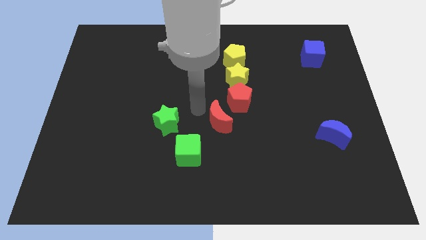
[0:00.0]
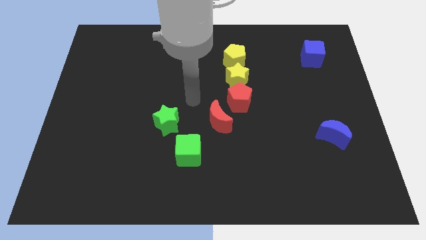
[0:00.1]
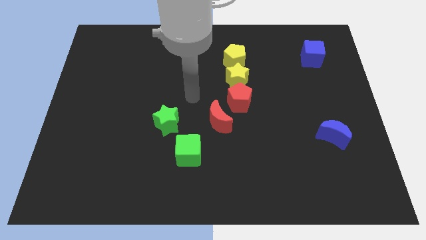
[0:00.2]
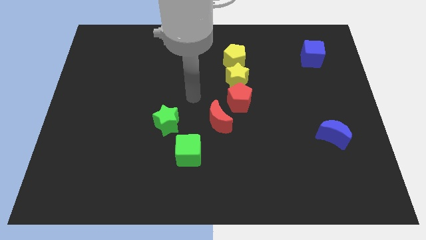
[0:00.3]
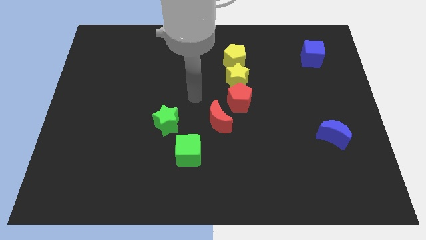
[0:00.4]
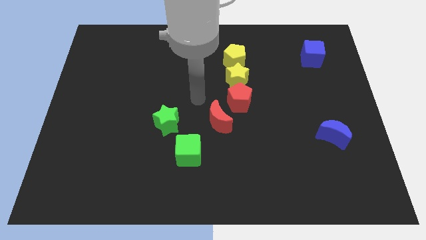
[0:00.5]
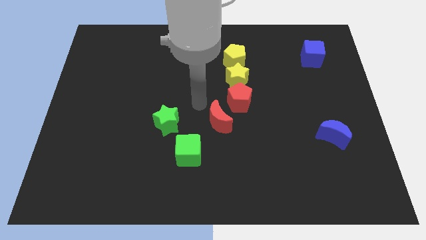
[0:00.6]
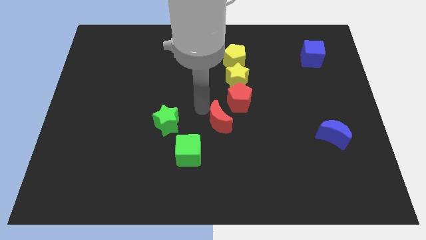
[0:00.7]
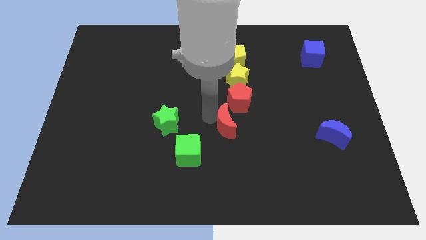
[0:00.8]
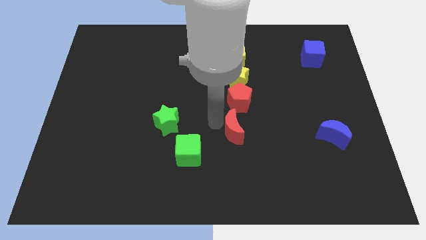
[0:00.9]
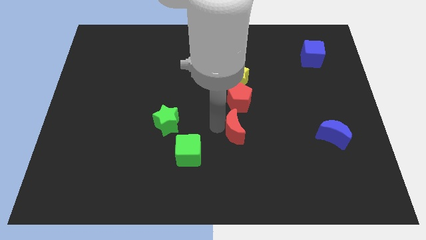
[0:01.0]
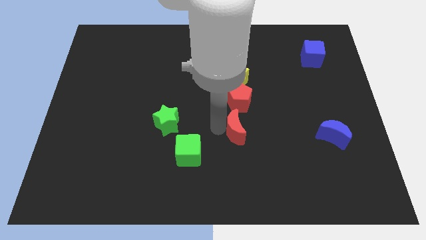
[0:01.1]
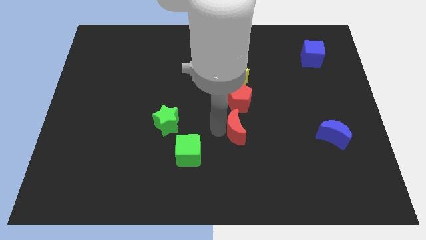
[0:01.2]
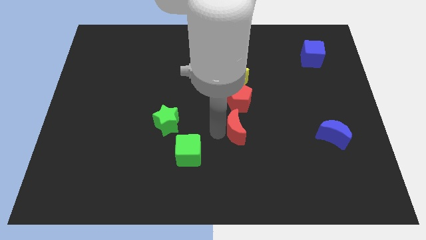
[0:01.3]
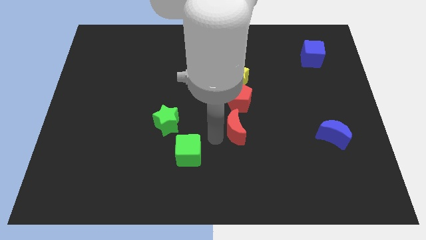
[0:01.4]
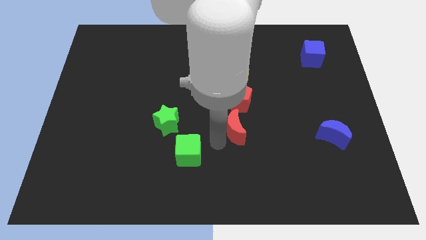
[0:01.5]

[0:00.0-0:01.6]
place red moon at the bottom of red pentagon

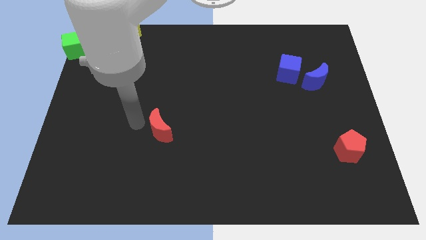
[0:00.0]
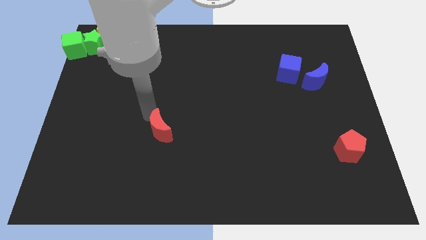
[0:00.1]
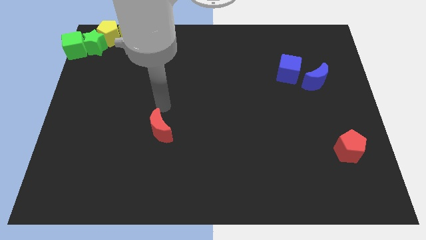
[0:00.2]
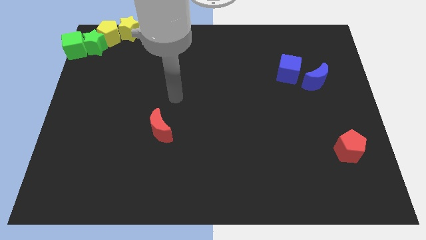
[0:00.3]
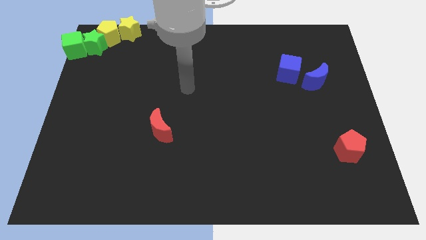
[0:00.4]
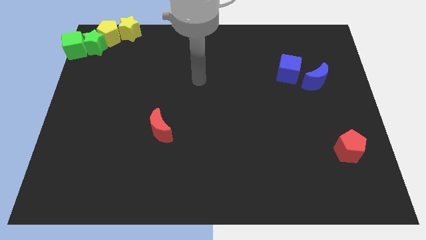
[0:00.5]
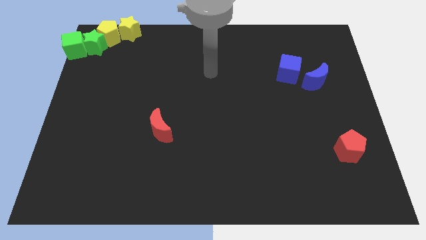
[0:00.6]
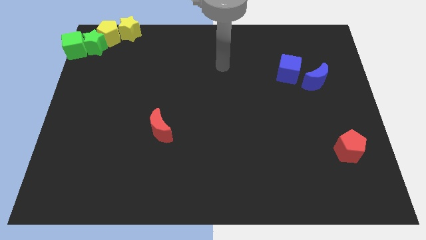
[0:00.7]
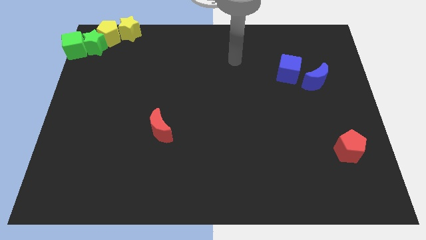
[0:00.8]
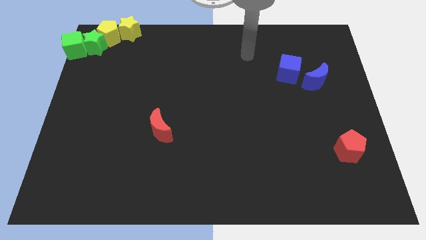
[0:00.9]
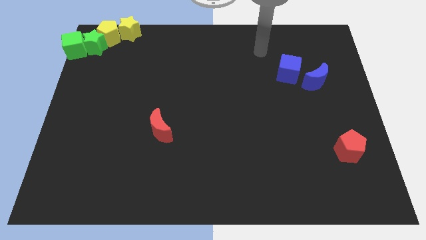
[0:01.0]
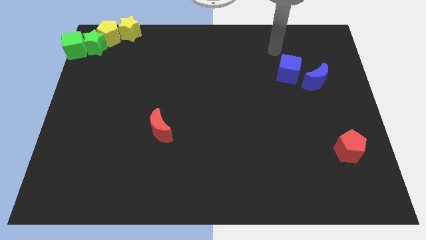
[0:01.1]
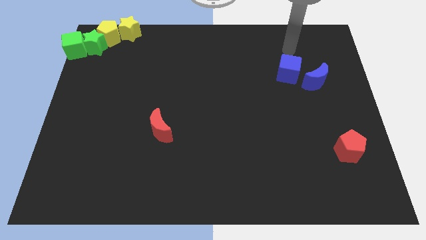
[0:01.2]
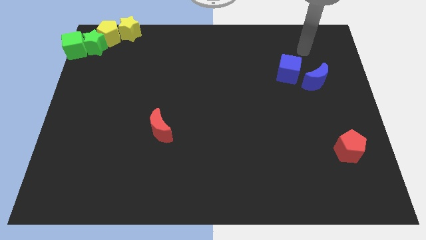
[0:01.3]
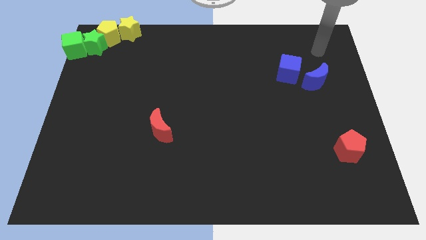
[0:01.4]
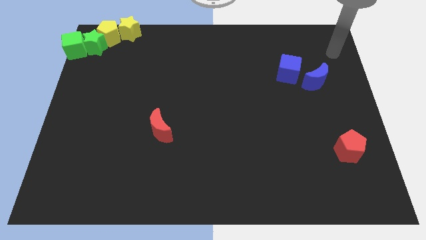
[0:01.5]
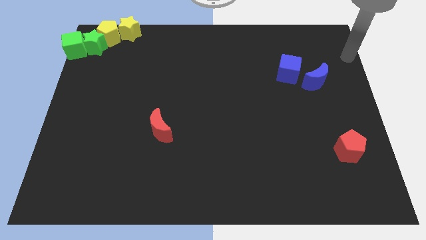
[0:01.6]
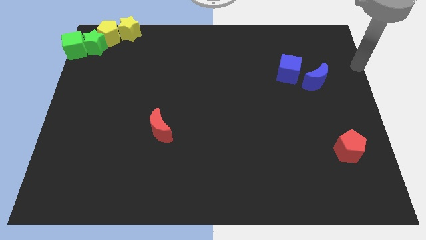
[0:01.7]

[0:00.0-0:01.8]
move your arm away from the red moon

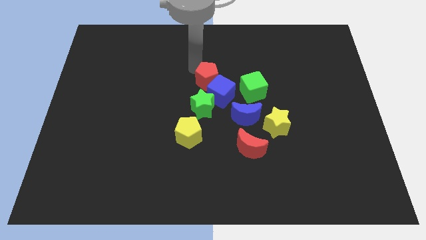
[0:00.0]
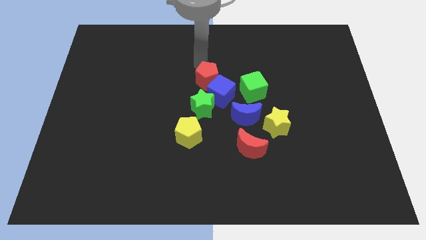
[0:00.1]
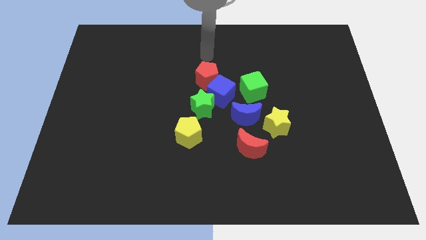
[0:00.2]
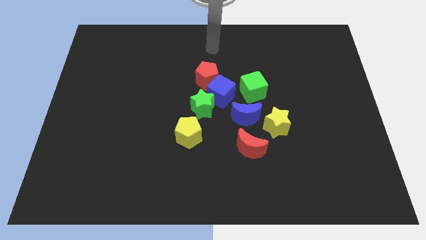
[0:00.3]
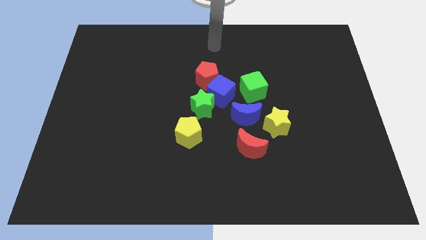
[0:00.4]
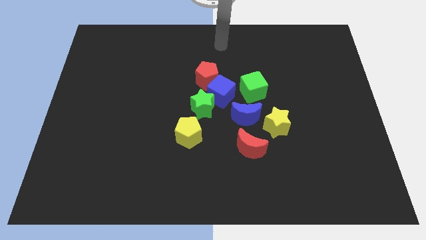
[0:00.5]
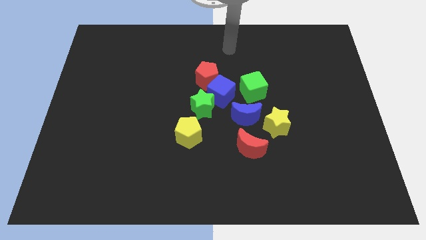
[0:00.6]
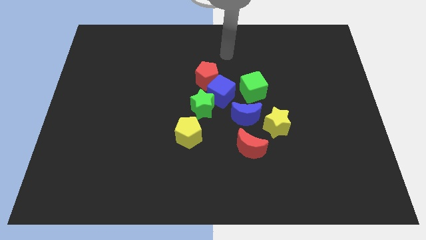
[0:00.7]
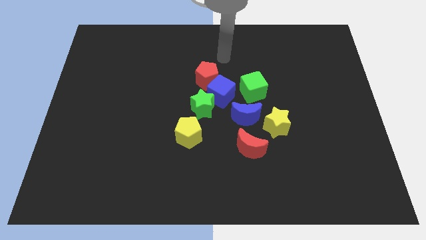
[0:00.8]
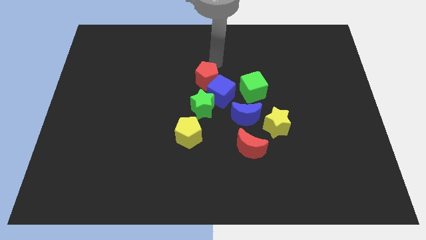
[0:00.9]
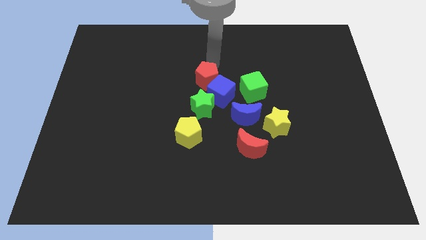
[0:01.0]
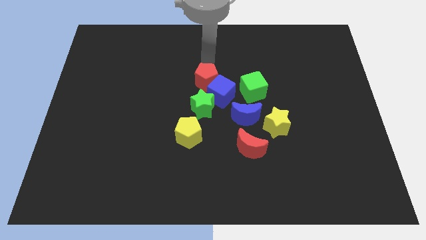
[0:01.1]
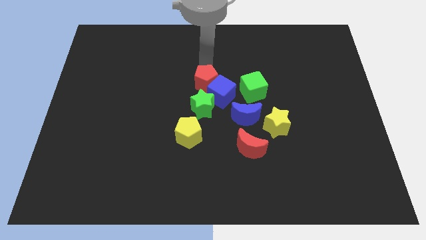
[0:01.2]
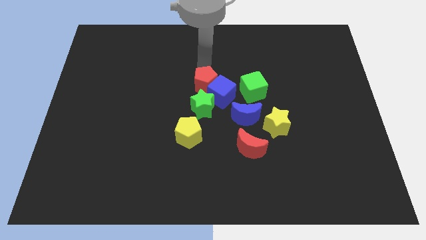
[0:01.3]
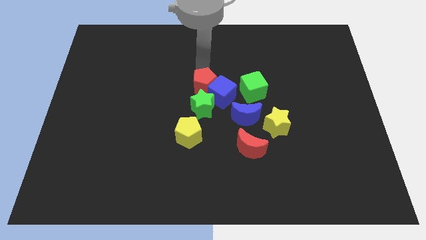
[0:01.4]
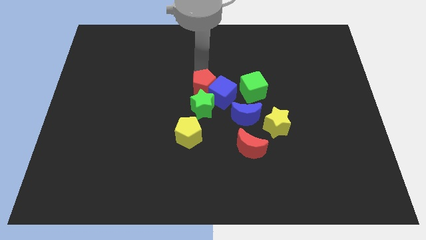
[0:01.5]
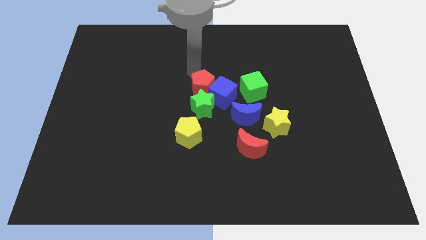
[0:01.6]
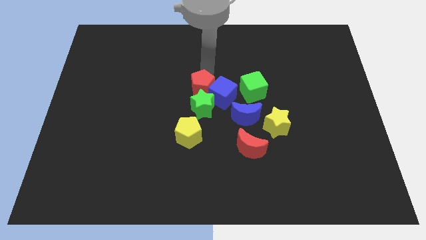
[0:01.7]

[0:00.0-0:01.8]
push the red pentagon into the green star

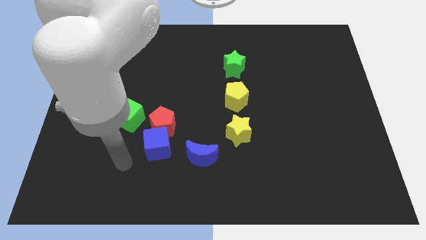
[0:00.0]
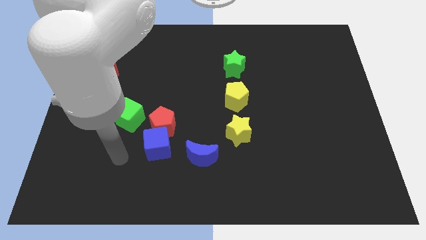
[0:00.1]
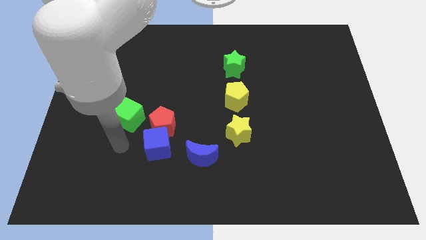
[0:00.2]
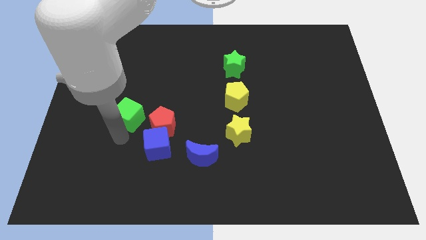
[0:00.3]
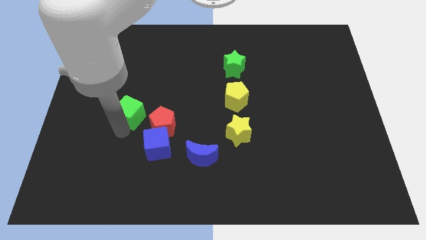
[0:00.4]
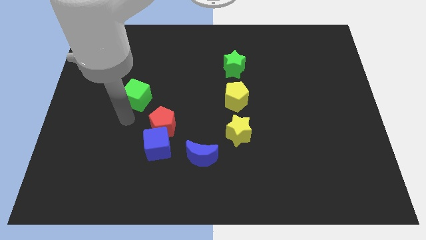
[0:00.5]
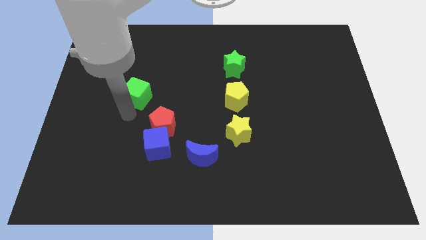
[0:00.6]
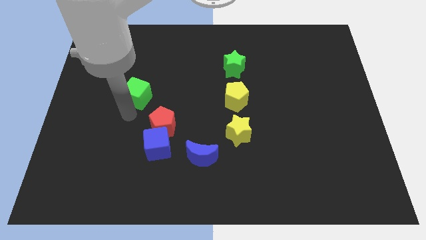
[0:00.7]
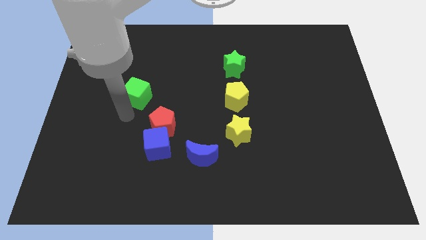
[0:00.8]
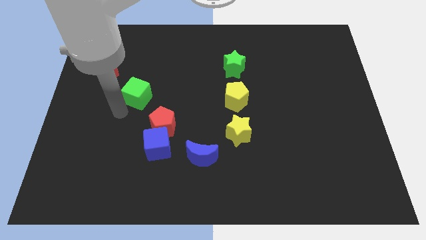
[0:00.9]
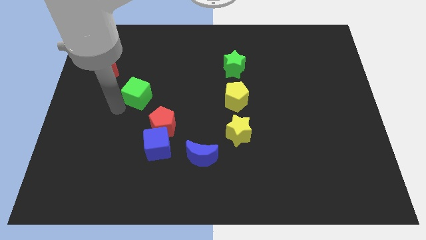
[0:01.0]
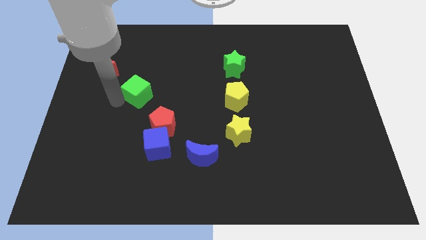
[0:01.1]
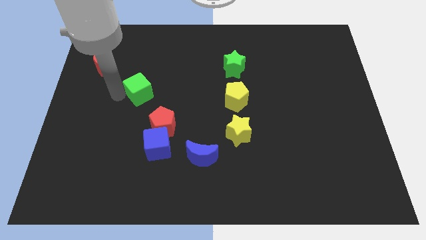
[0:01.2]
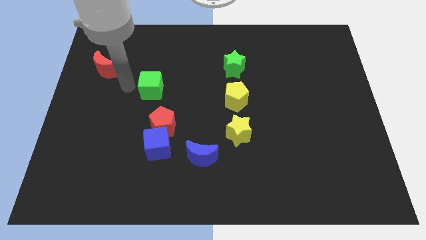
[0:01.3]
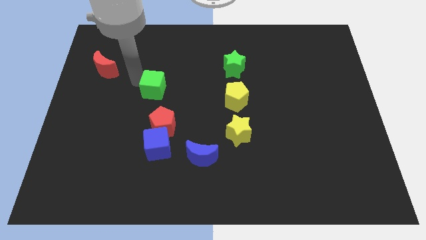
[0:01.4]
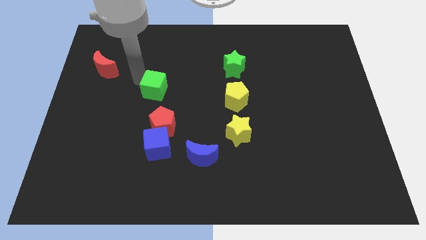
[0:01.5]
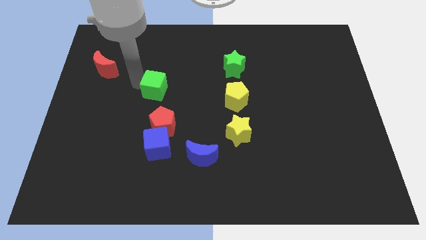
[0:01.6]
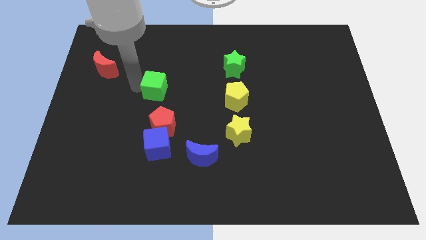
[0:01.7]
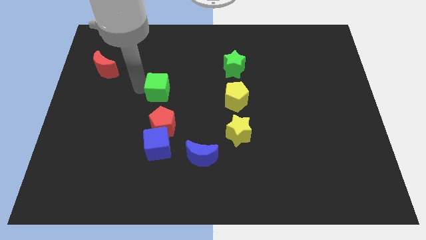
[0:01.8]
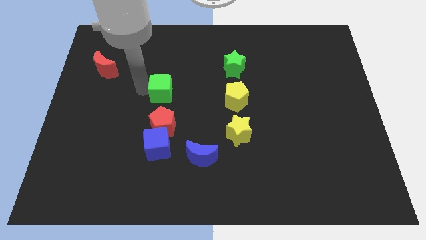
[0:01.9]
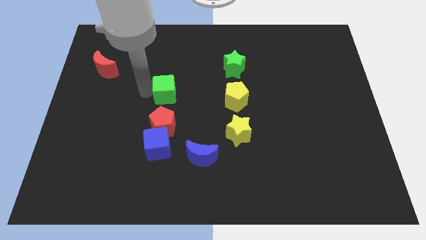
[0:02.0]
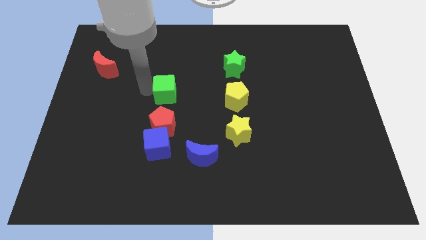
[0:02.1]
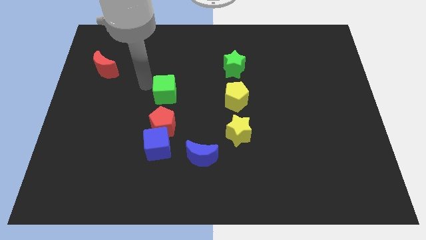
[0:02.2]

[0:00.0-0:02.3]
place the green cube to the top of the red pentagon

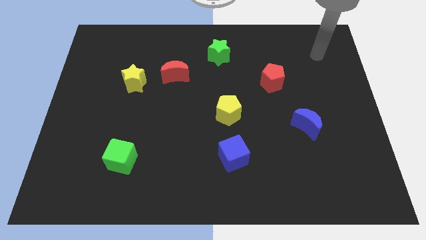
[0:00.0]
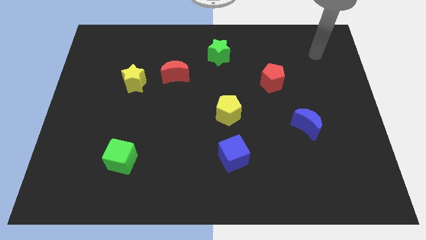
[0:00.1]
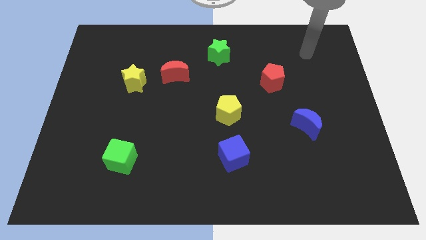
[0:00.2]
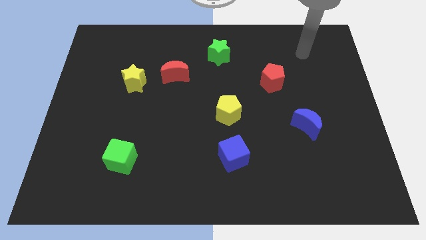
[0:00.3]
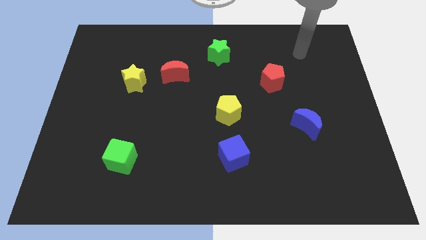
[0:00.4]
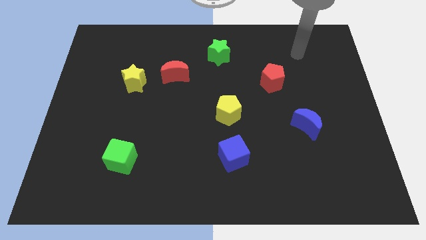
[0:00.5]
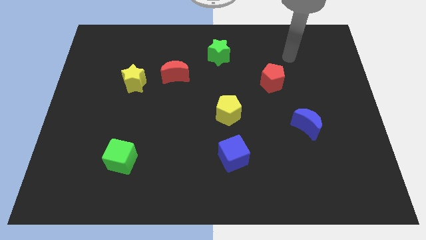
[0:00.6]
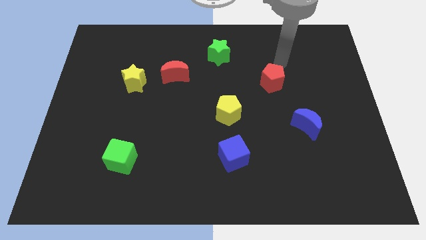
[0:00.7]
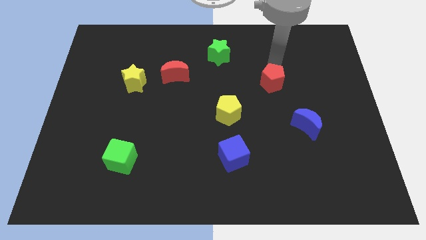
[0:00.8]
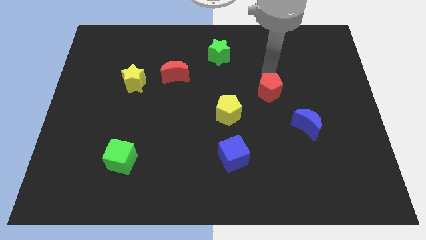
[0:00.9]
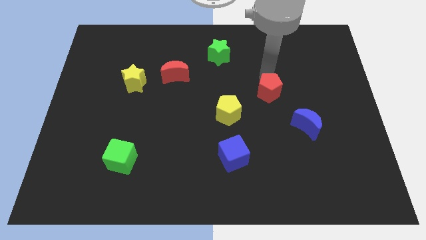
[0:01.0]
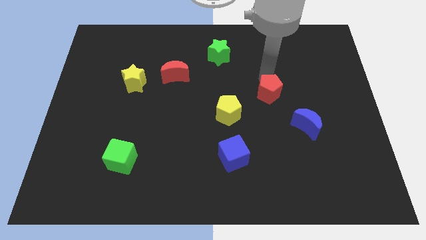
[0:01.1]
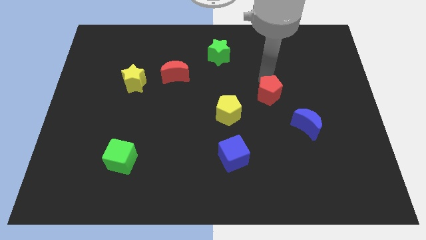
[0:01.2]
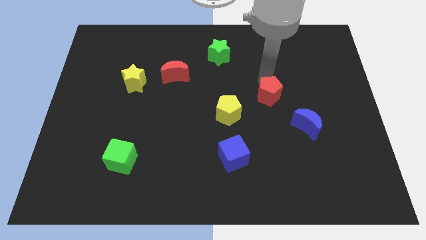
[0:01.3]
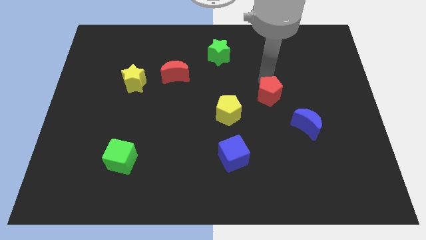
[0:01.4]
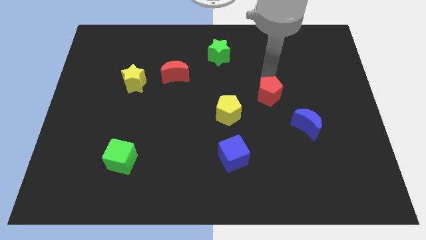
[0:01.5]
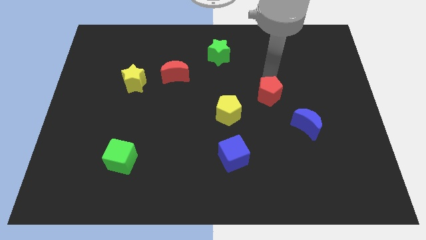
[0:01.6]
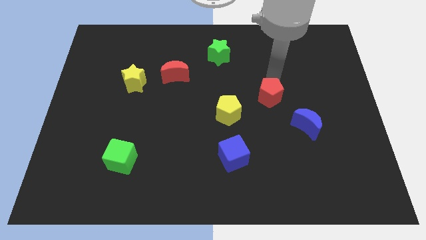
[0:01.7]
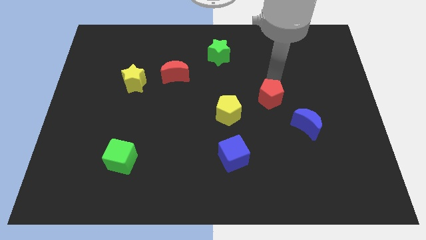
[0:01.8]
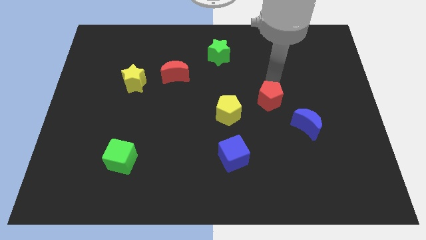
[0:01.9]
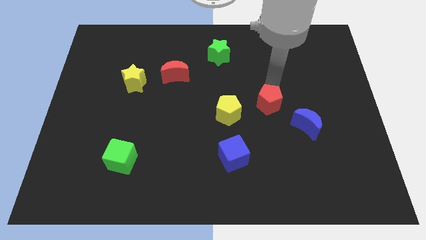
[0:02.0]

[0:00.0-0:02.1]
move the red pentagon parallel to the yellow pentagon
